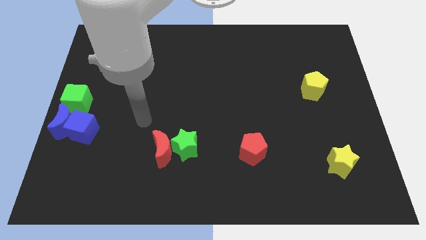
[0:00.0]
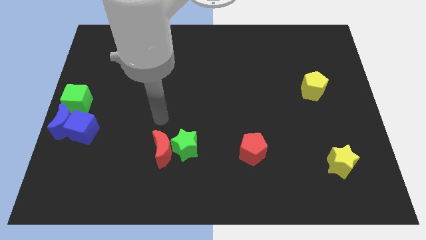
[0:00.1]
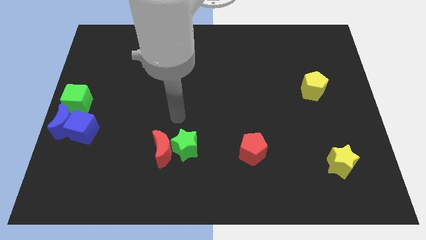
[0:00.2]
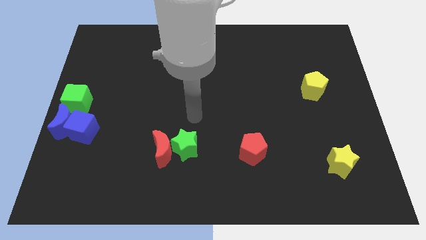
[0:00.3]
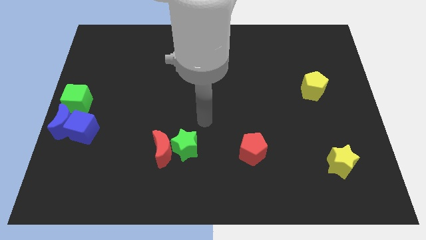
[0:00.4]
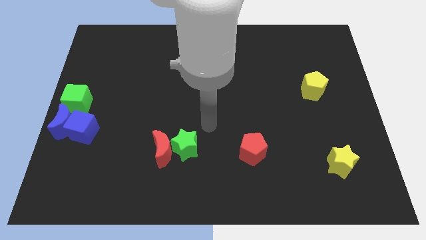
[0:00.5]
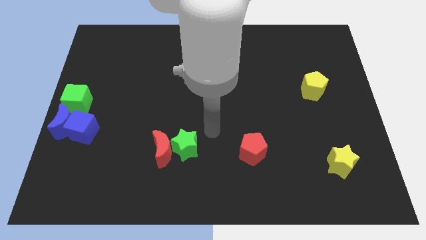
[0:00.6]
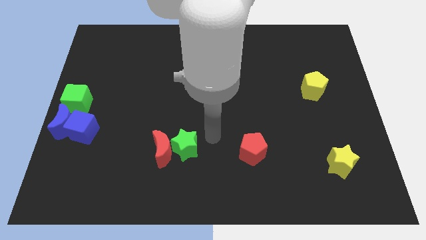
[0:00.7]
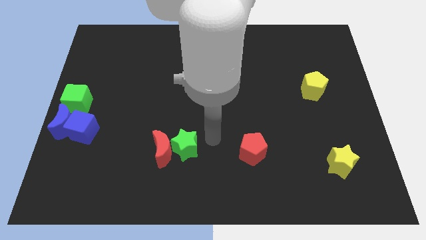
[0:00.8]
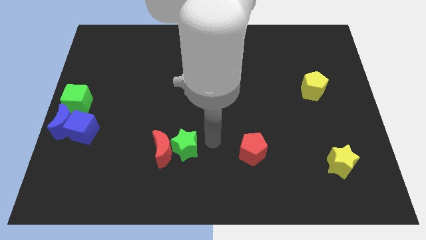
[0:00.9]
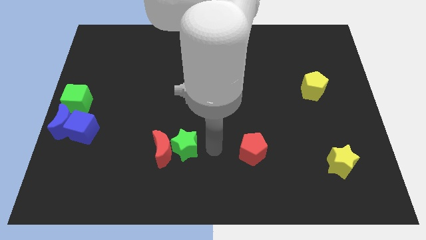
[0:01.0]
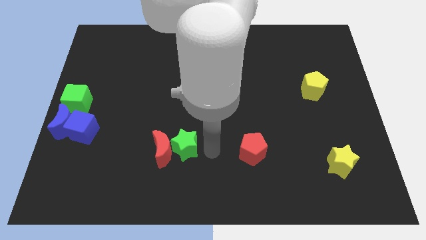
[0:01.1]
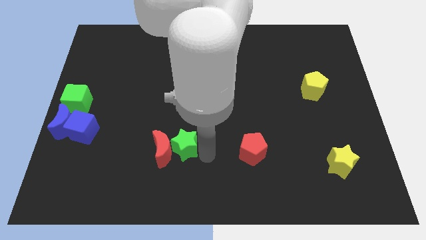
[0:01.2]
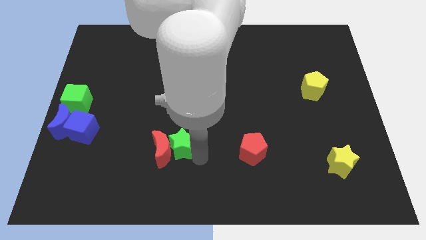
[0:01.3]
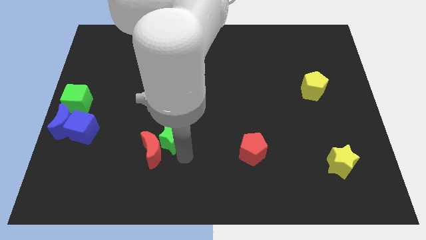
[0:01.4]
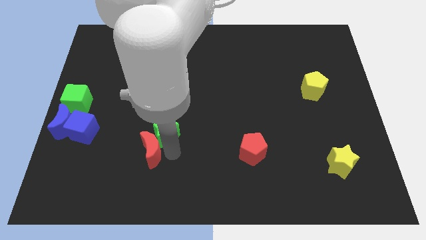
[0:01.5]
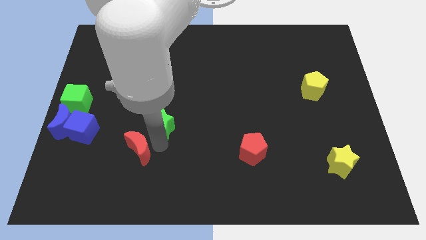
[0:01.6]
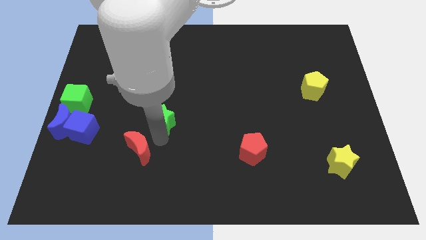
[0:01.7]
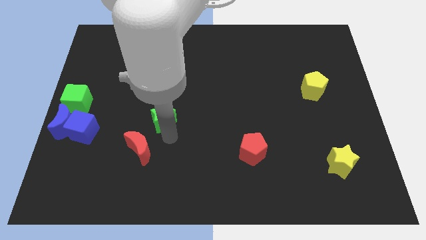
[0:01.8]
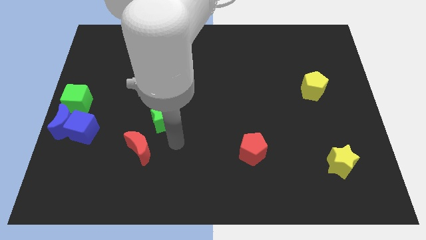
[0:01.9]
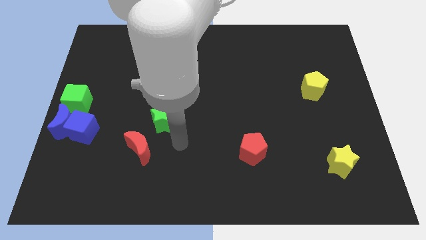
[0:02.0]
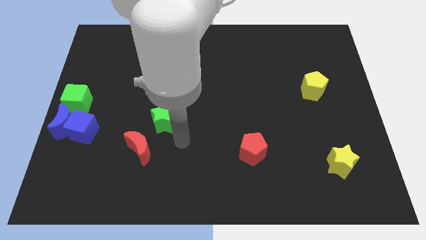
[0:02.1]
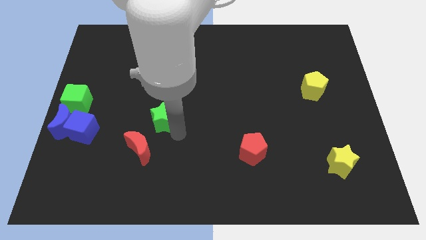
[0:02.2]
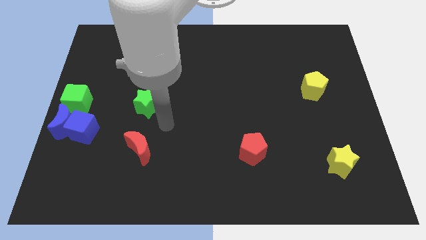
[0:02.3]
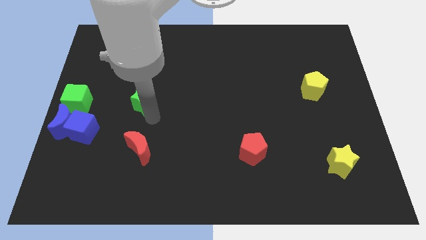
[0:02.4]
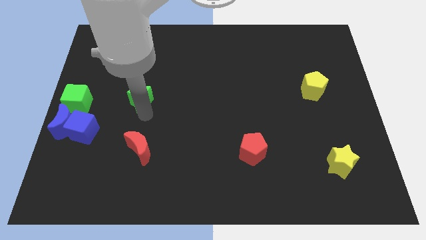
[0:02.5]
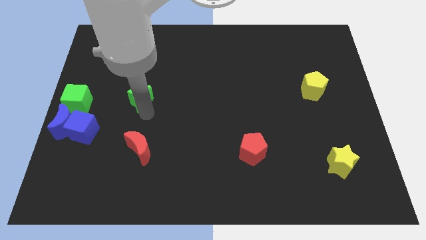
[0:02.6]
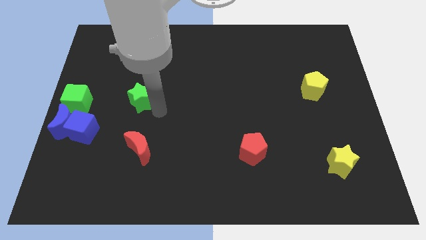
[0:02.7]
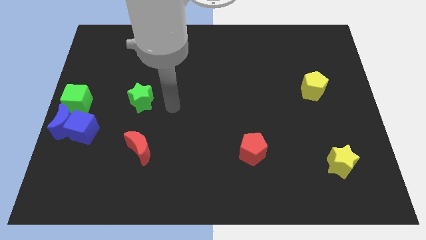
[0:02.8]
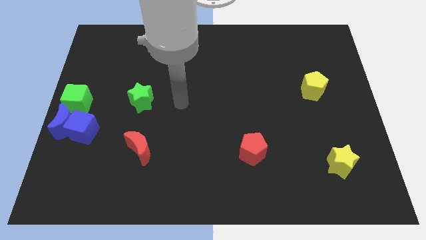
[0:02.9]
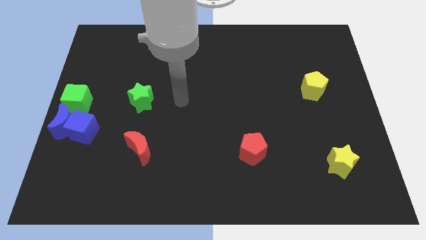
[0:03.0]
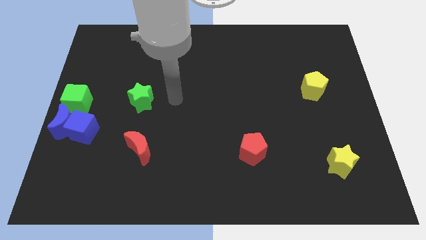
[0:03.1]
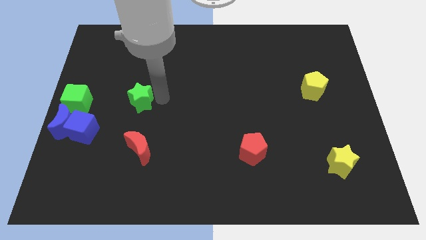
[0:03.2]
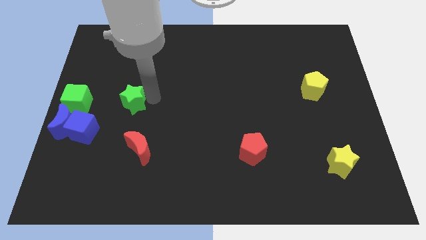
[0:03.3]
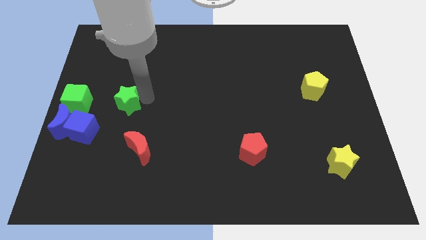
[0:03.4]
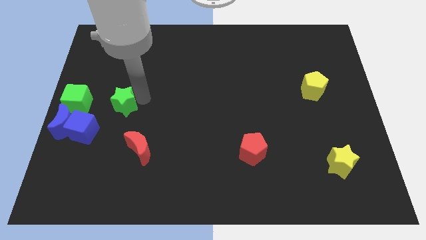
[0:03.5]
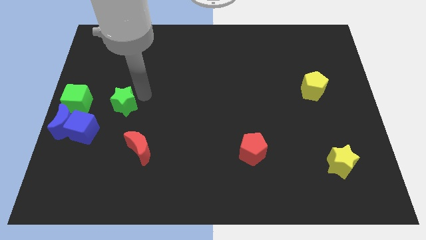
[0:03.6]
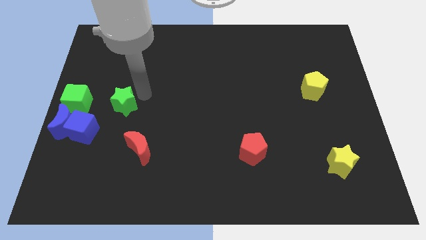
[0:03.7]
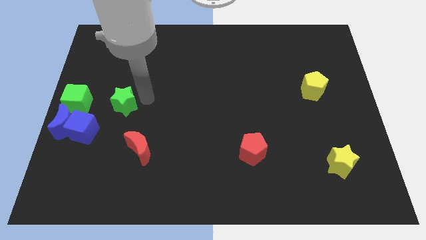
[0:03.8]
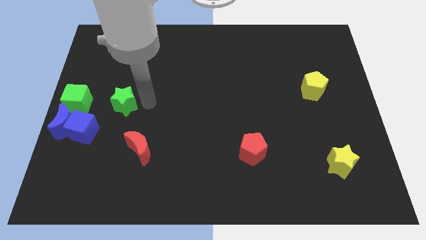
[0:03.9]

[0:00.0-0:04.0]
move the green star to the right of the green cube

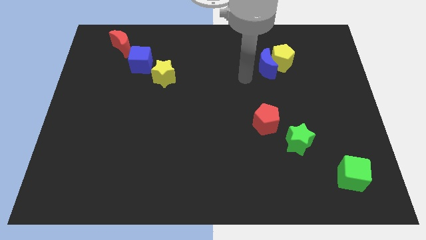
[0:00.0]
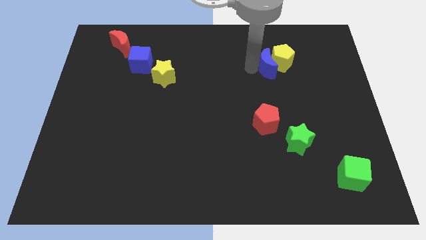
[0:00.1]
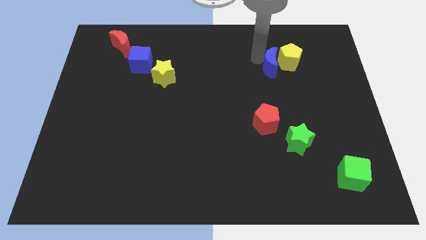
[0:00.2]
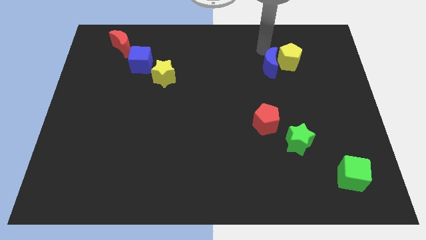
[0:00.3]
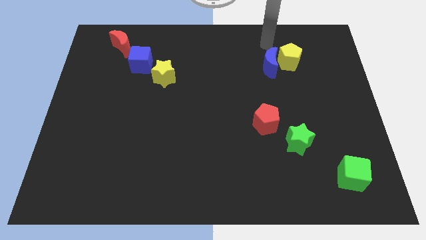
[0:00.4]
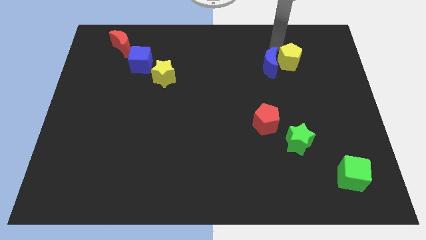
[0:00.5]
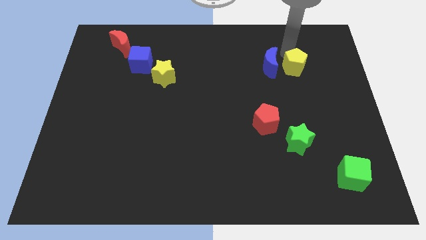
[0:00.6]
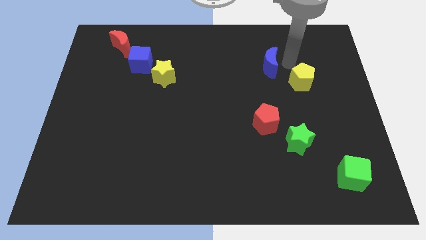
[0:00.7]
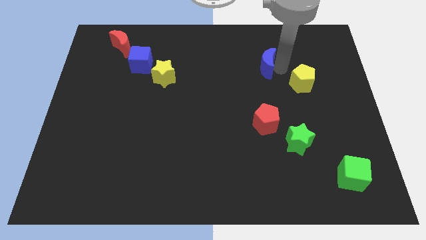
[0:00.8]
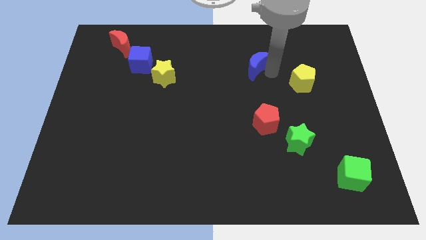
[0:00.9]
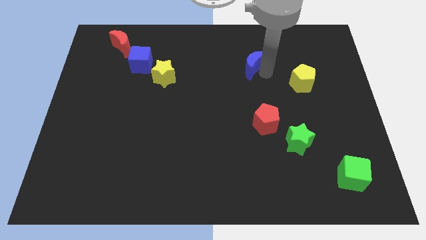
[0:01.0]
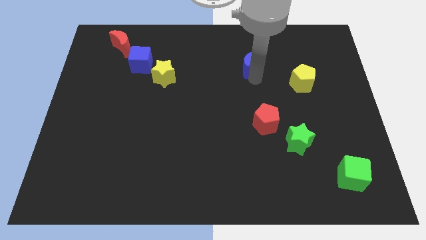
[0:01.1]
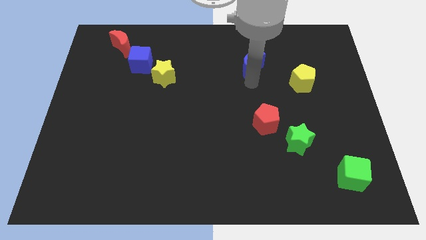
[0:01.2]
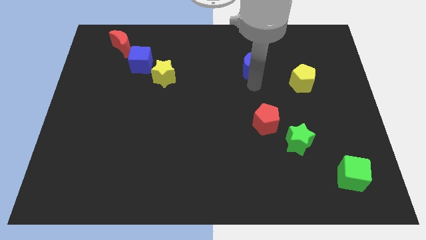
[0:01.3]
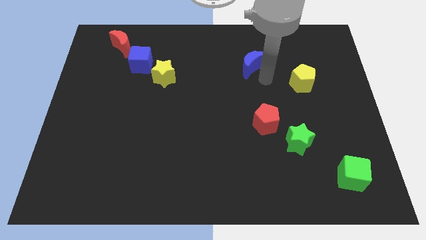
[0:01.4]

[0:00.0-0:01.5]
separate the blue crescent and the yellow pentagon from each other

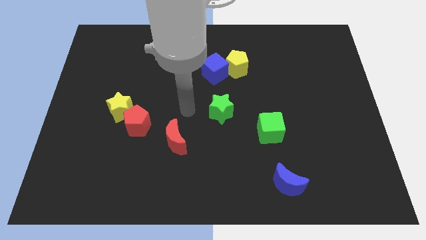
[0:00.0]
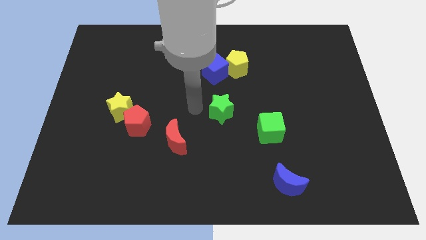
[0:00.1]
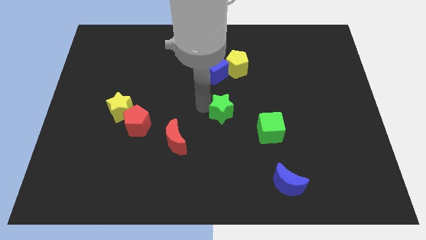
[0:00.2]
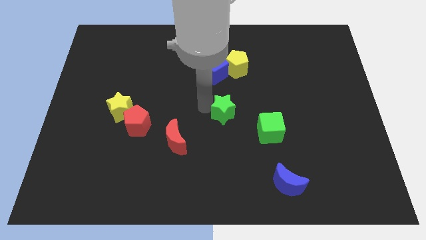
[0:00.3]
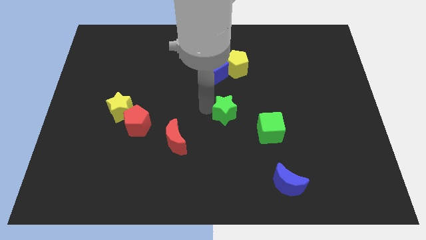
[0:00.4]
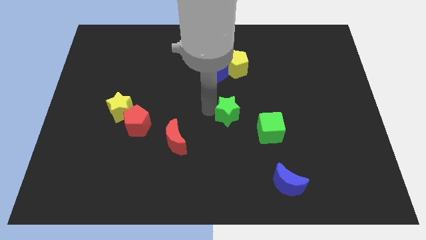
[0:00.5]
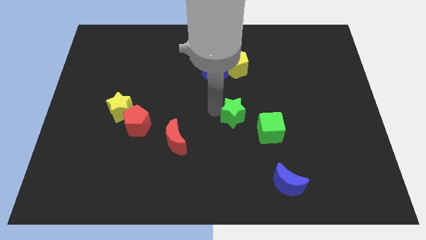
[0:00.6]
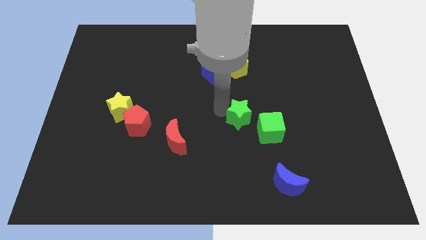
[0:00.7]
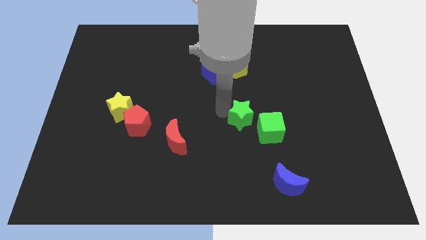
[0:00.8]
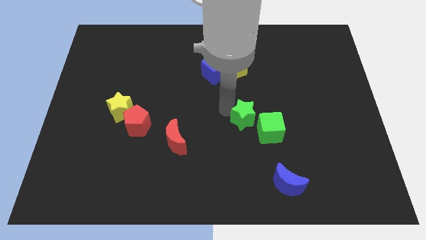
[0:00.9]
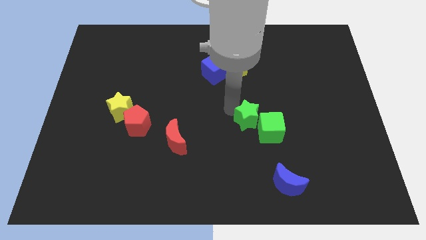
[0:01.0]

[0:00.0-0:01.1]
move green star to green cube

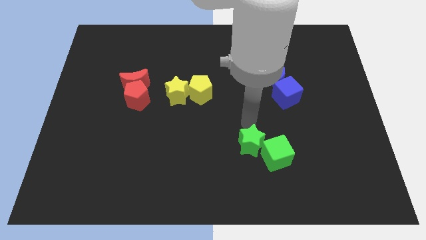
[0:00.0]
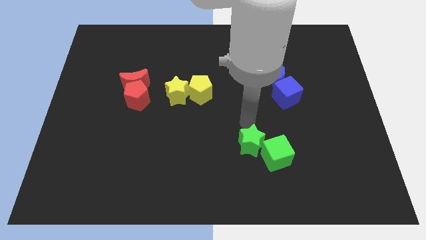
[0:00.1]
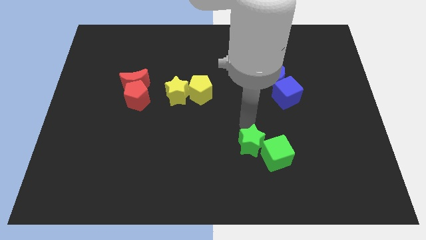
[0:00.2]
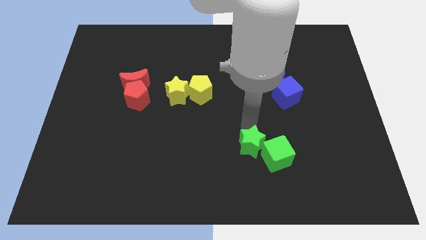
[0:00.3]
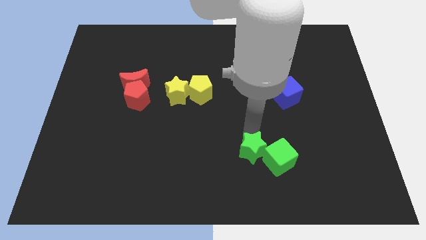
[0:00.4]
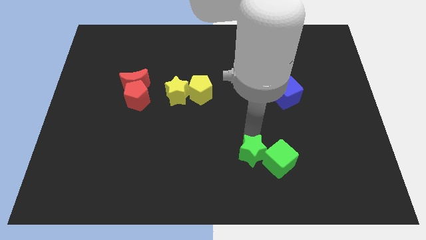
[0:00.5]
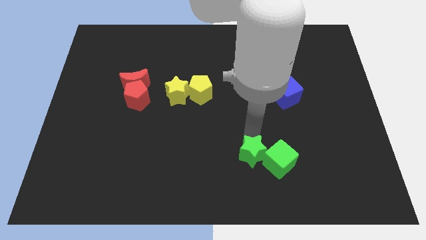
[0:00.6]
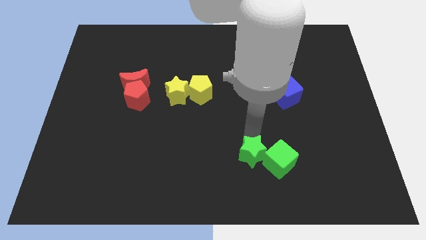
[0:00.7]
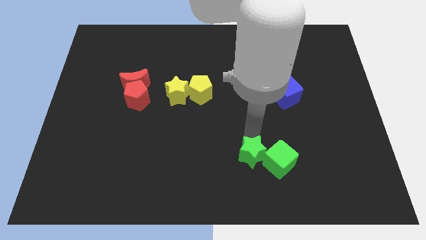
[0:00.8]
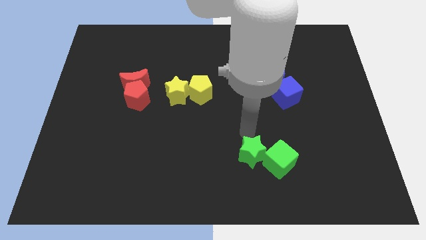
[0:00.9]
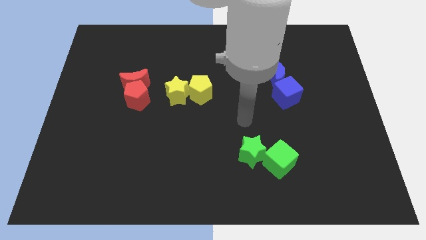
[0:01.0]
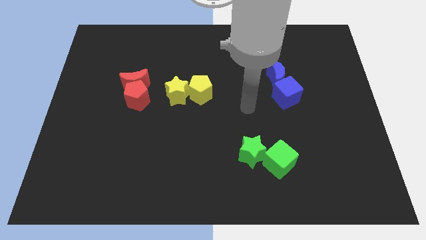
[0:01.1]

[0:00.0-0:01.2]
move green star slightly down

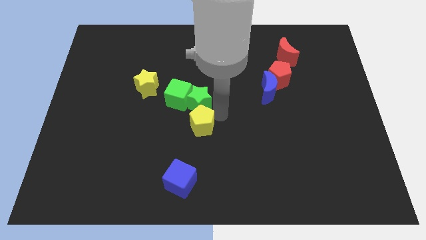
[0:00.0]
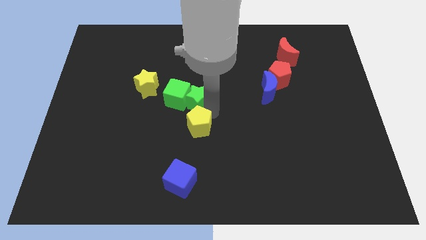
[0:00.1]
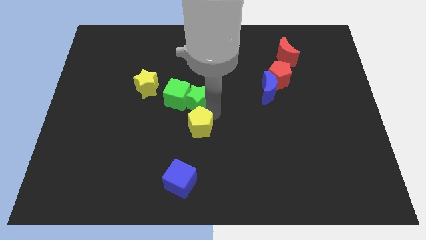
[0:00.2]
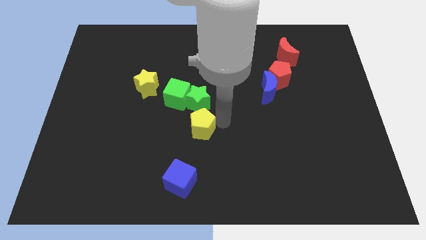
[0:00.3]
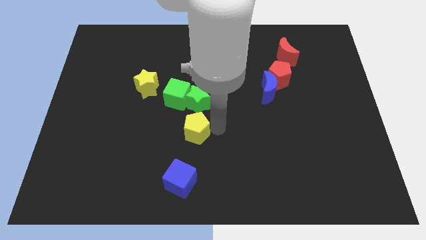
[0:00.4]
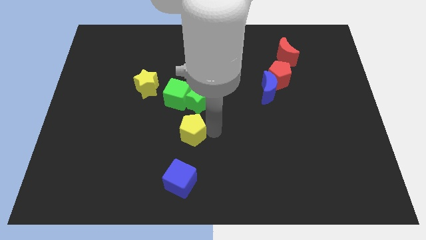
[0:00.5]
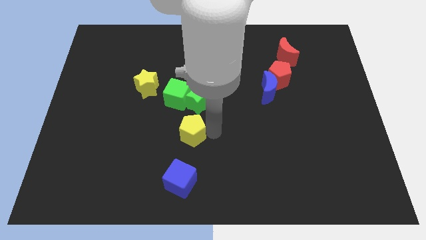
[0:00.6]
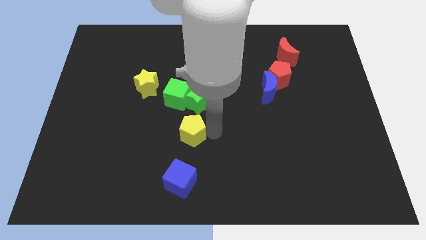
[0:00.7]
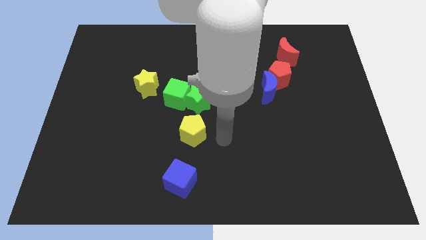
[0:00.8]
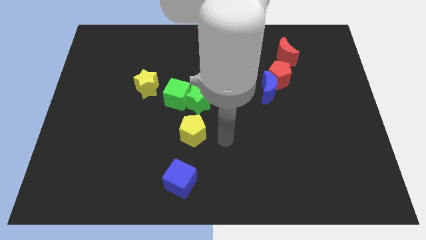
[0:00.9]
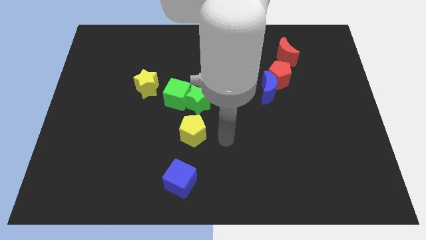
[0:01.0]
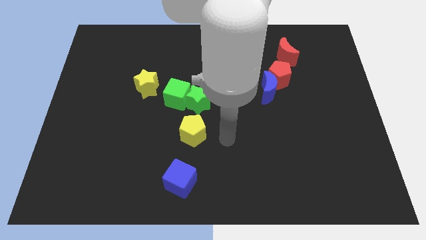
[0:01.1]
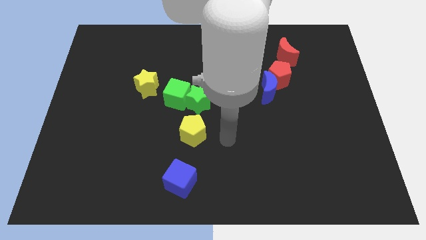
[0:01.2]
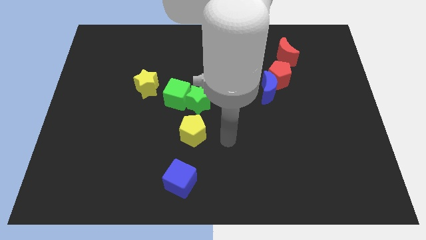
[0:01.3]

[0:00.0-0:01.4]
separate yellow pentagon from the green star
